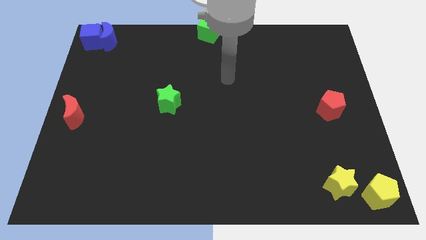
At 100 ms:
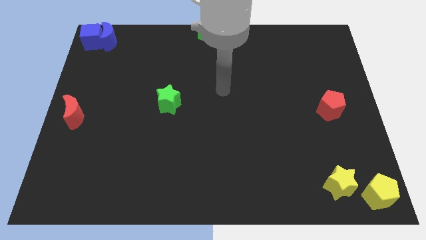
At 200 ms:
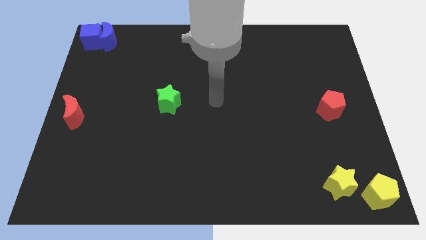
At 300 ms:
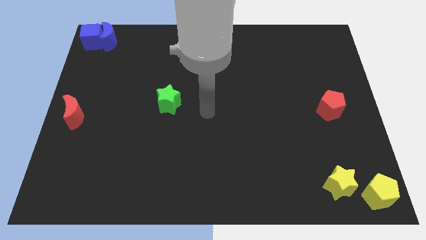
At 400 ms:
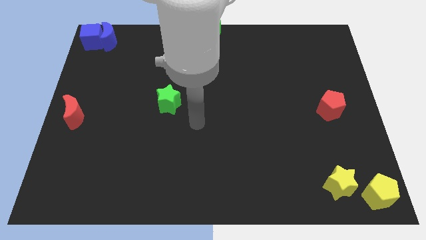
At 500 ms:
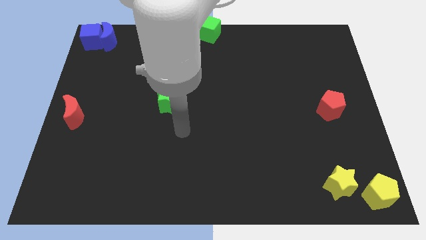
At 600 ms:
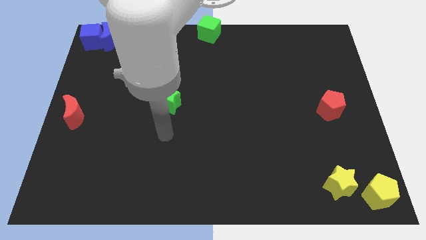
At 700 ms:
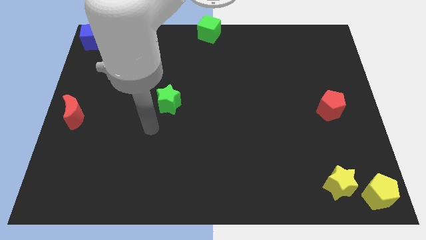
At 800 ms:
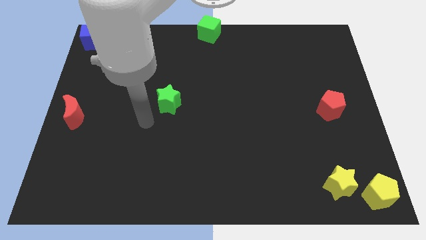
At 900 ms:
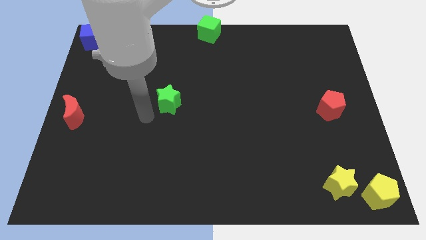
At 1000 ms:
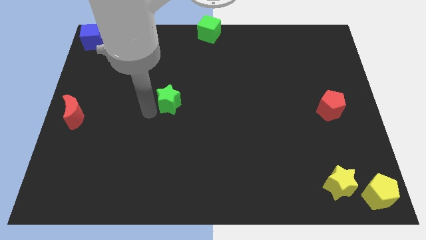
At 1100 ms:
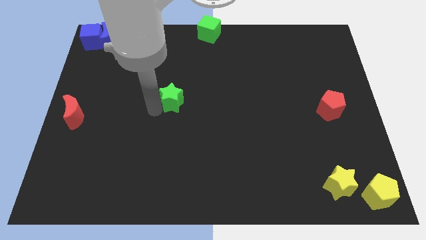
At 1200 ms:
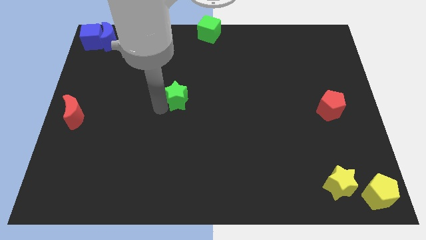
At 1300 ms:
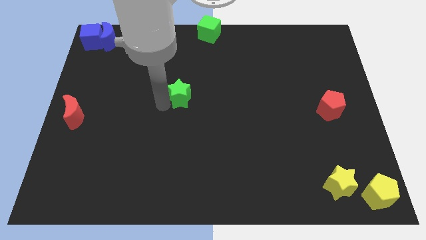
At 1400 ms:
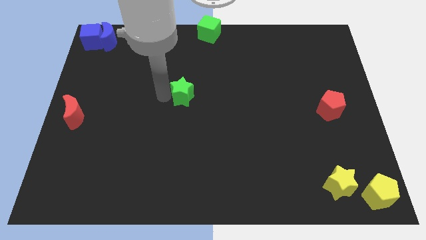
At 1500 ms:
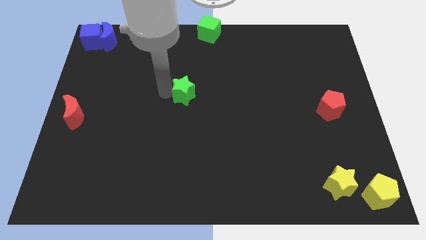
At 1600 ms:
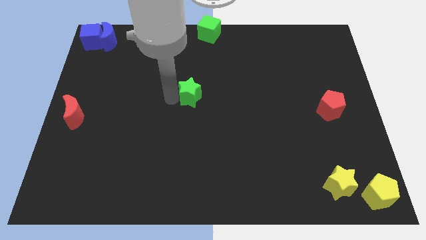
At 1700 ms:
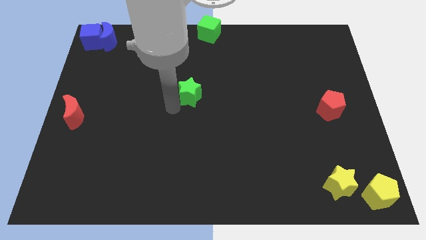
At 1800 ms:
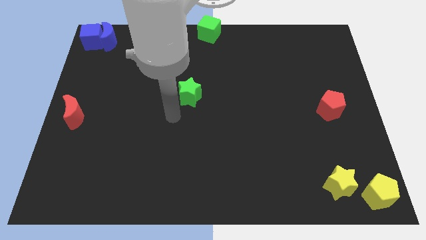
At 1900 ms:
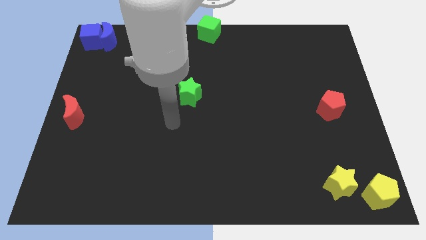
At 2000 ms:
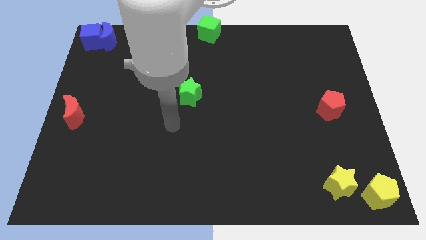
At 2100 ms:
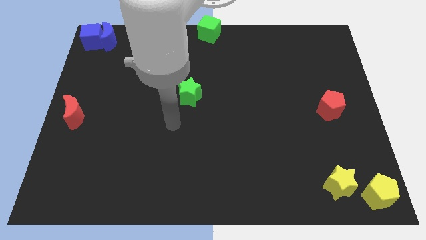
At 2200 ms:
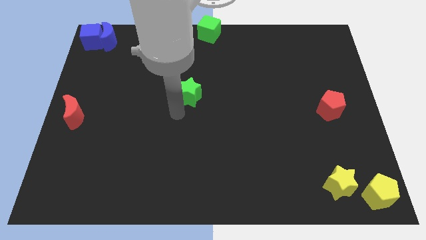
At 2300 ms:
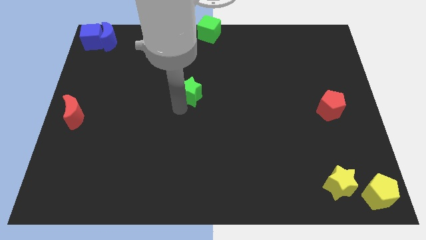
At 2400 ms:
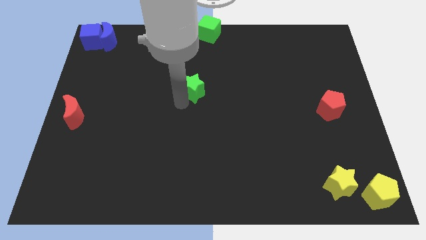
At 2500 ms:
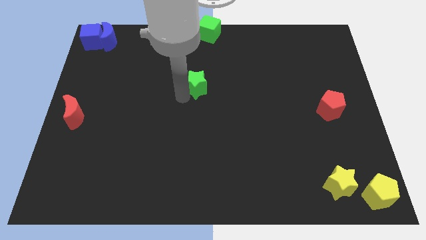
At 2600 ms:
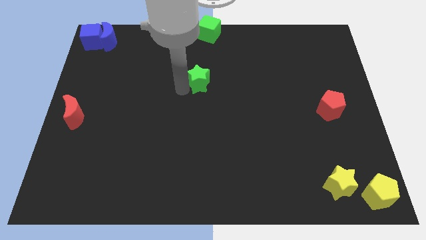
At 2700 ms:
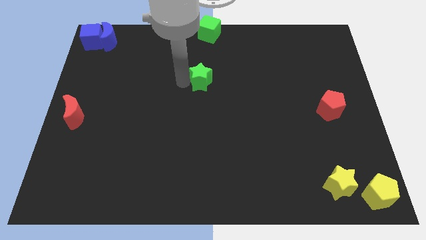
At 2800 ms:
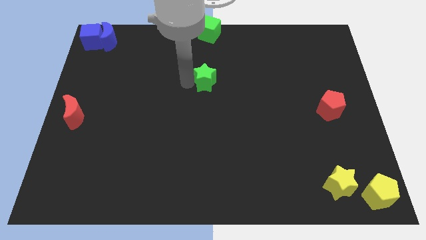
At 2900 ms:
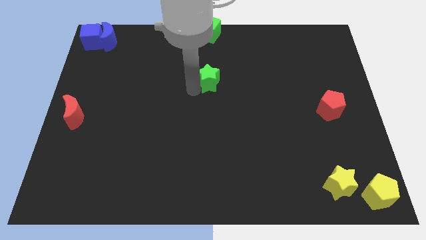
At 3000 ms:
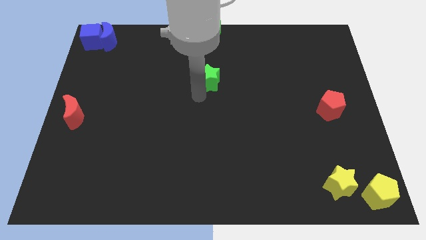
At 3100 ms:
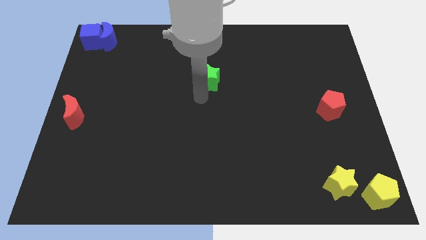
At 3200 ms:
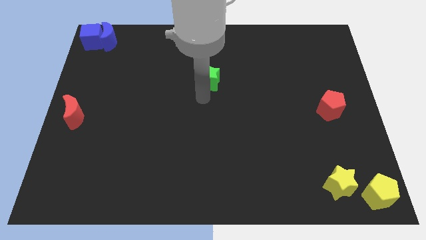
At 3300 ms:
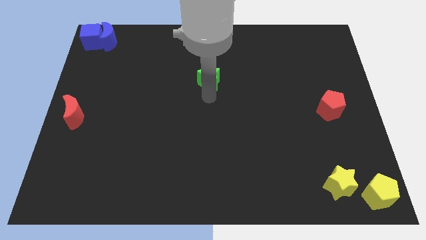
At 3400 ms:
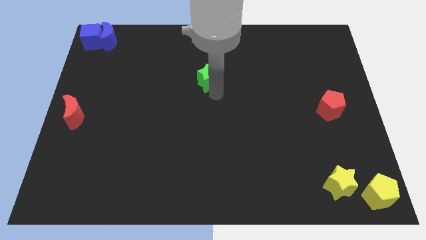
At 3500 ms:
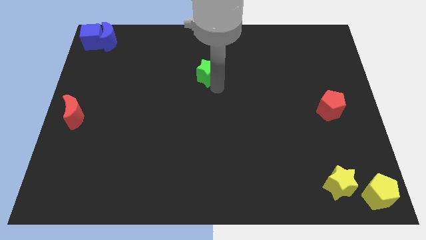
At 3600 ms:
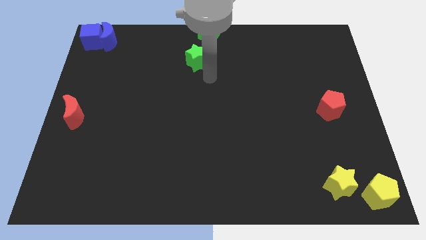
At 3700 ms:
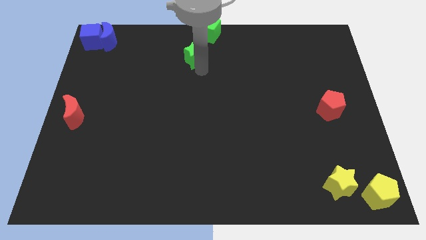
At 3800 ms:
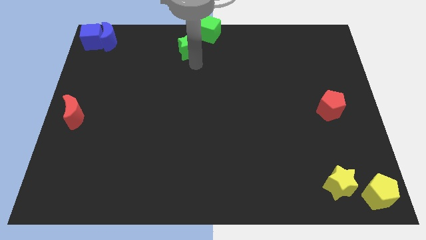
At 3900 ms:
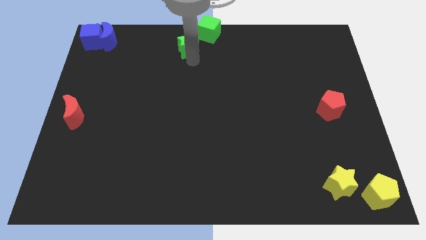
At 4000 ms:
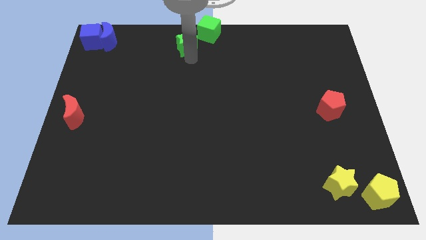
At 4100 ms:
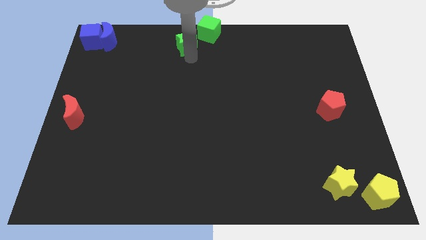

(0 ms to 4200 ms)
place the green star diagonally below the green cube

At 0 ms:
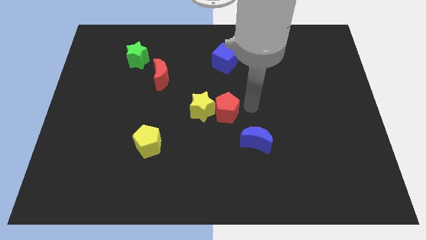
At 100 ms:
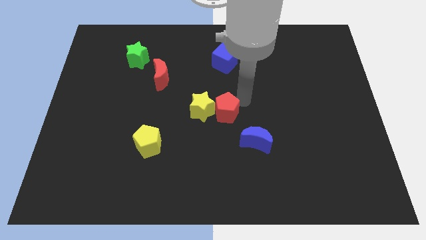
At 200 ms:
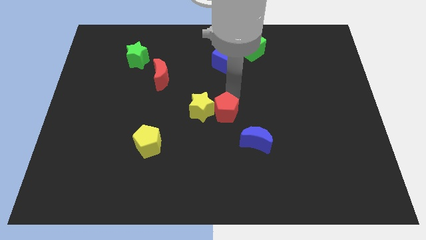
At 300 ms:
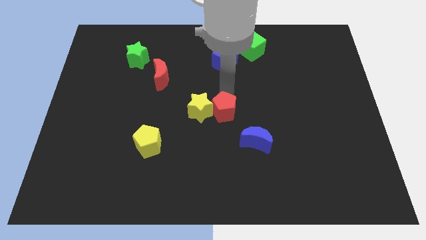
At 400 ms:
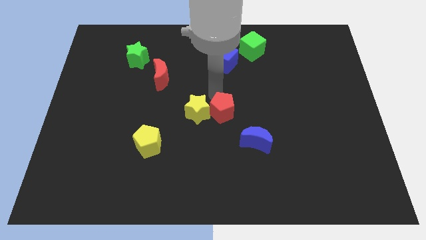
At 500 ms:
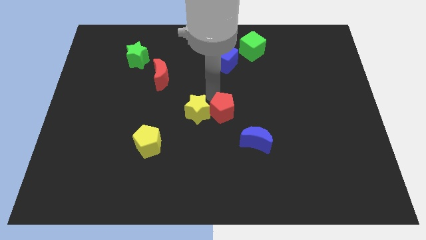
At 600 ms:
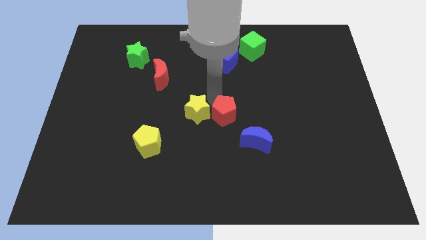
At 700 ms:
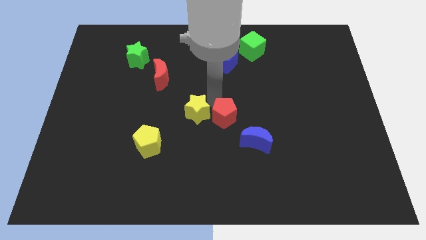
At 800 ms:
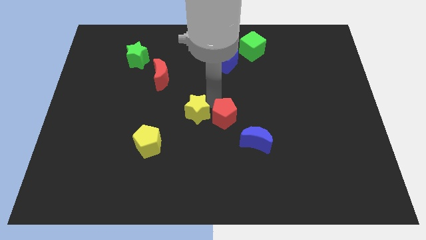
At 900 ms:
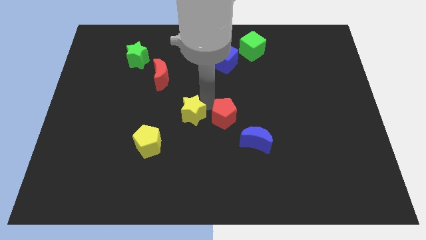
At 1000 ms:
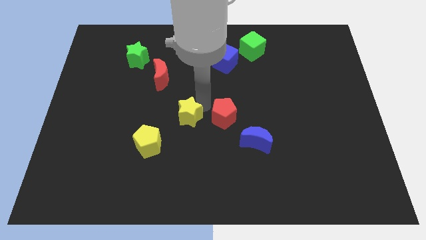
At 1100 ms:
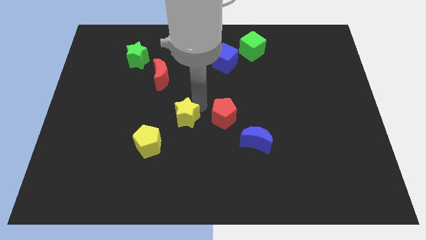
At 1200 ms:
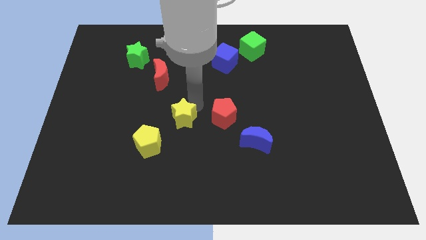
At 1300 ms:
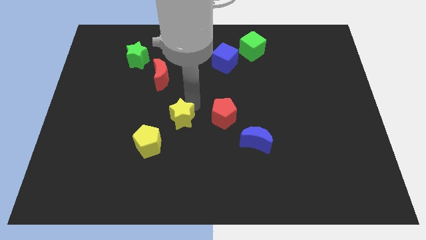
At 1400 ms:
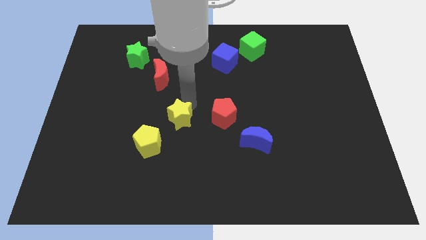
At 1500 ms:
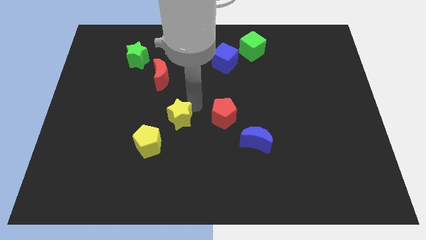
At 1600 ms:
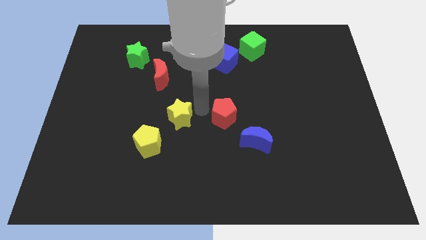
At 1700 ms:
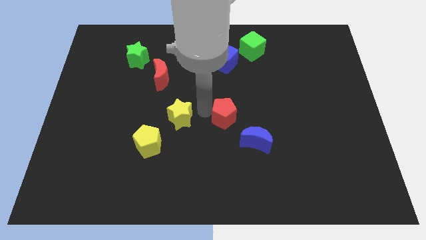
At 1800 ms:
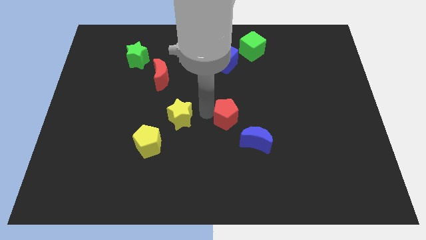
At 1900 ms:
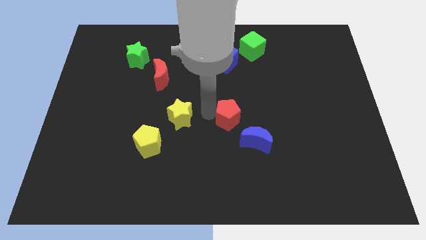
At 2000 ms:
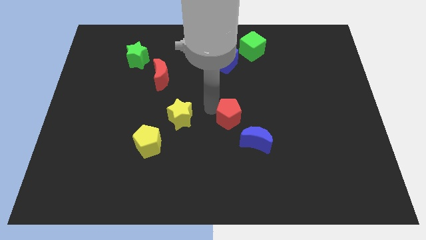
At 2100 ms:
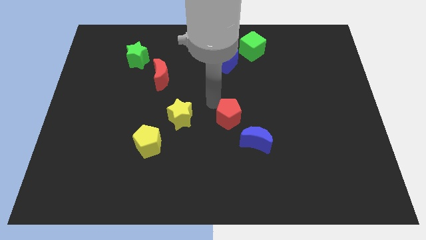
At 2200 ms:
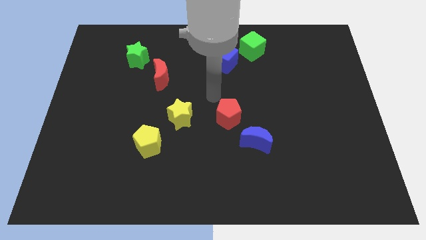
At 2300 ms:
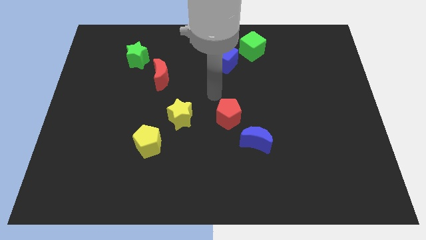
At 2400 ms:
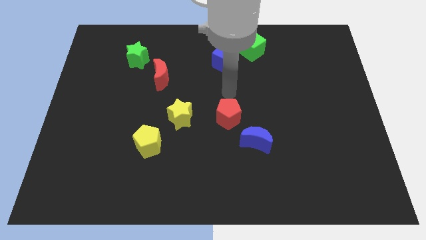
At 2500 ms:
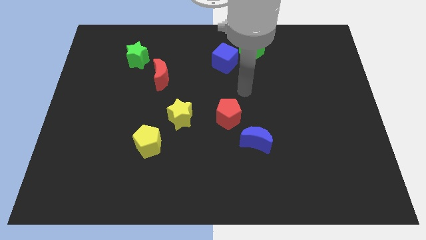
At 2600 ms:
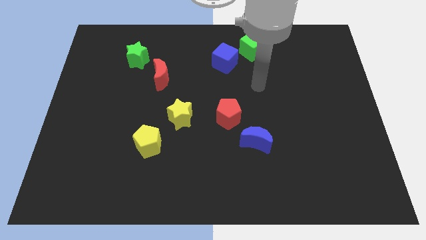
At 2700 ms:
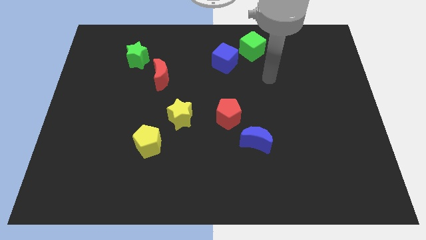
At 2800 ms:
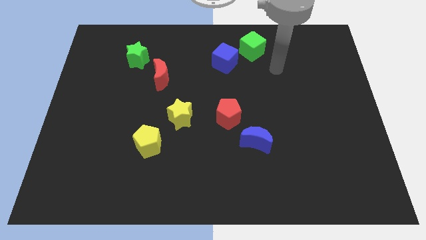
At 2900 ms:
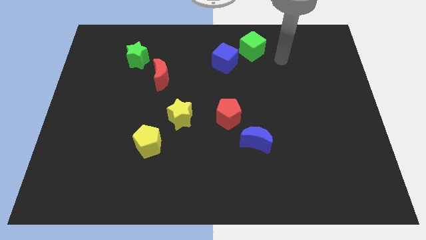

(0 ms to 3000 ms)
separate yellow star and red pentagon

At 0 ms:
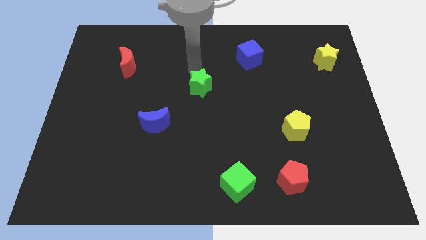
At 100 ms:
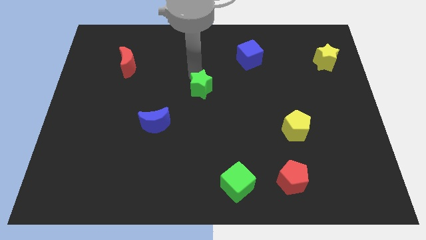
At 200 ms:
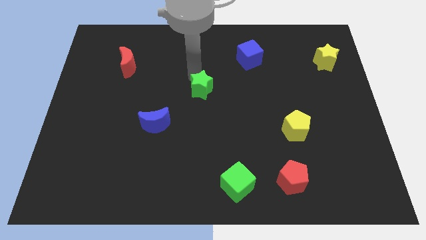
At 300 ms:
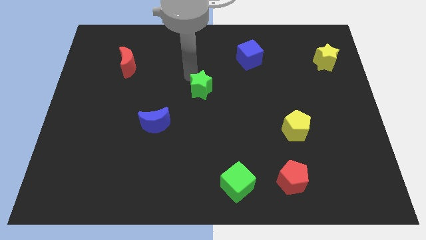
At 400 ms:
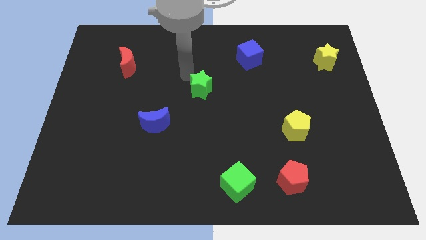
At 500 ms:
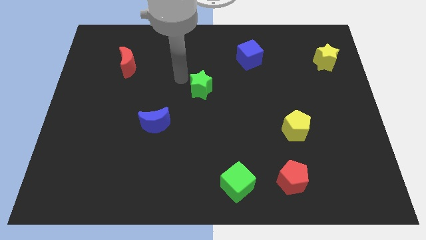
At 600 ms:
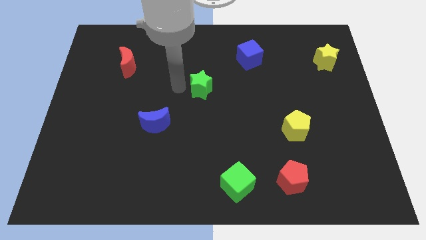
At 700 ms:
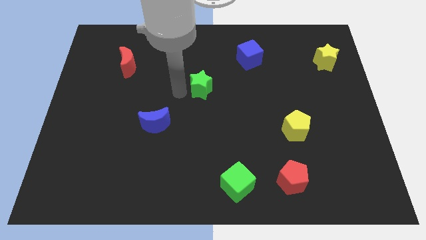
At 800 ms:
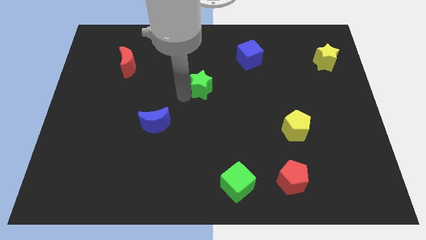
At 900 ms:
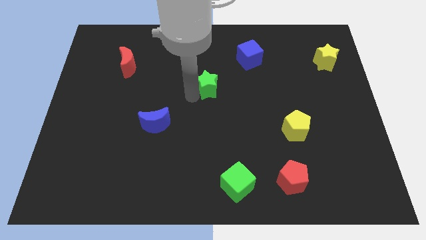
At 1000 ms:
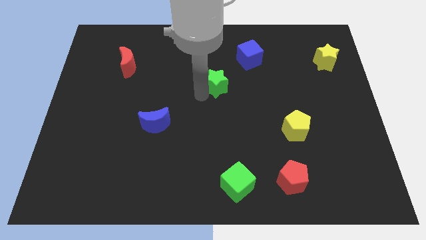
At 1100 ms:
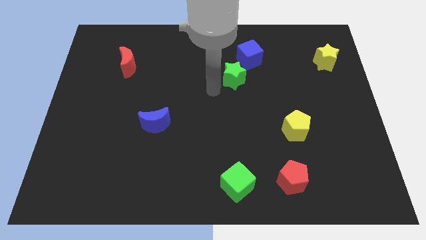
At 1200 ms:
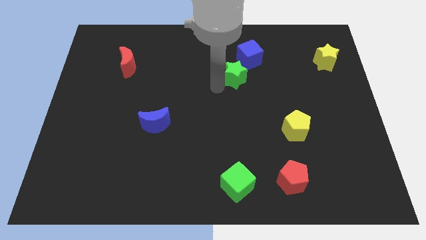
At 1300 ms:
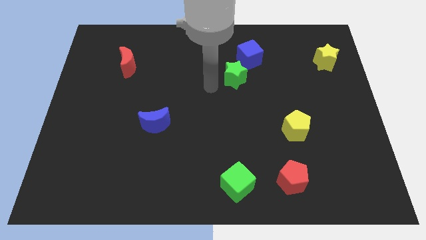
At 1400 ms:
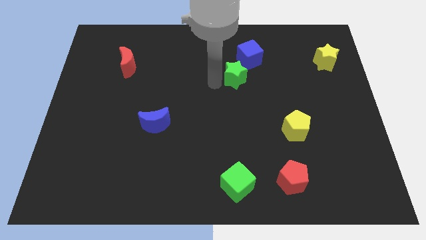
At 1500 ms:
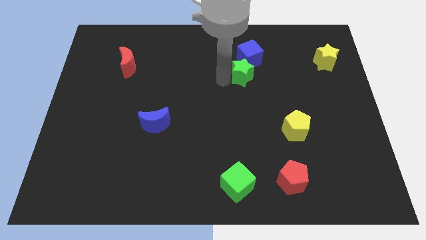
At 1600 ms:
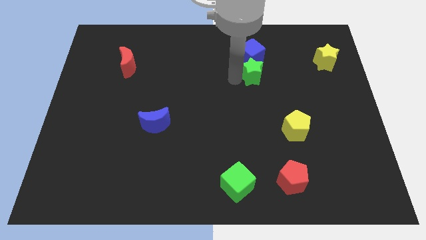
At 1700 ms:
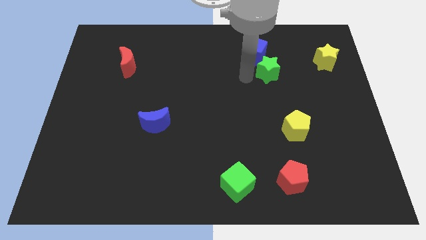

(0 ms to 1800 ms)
put the green star to the bottom side of the blue cube

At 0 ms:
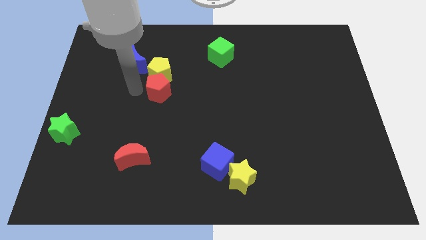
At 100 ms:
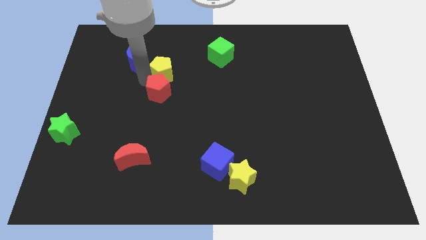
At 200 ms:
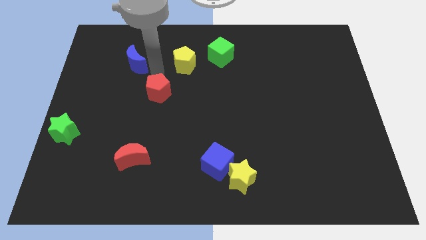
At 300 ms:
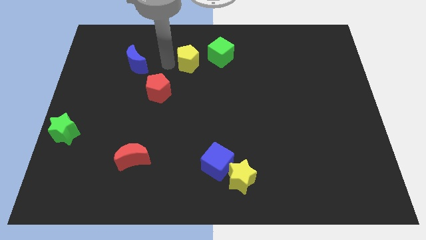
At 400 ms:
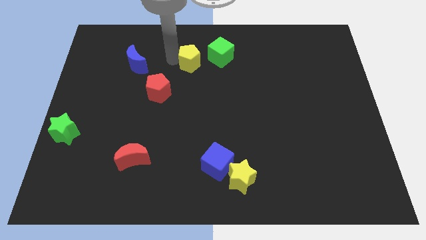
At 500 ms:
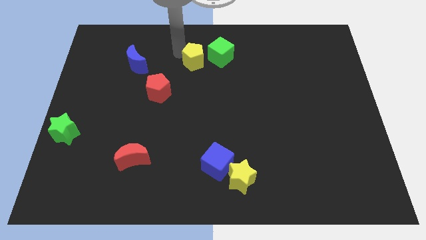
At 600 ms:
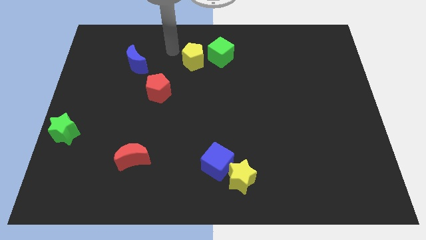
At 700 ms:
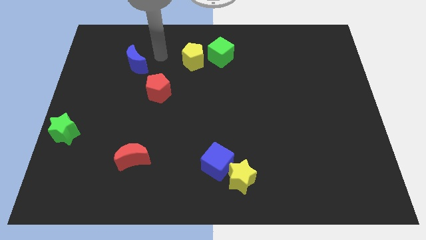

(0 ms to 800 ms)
separate yellow pentagon from red pentagon
